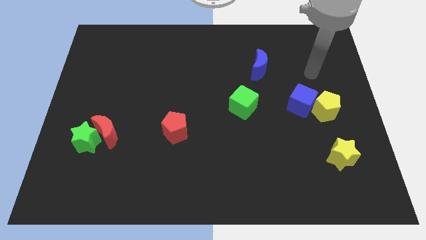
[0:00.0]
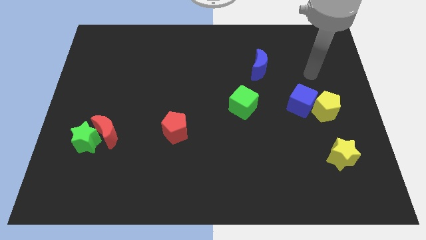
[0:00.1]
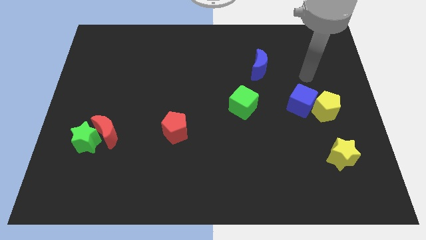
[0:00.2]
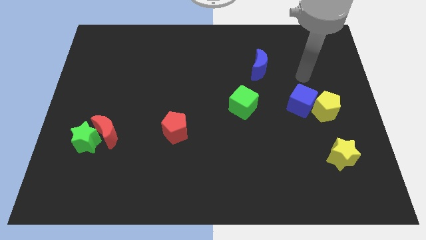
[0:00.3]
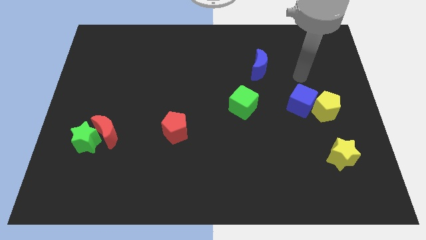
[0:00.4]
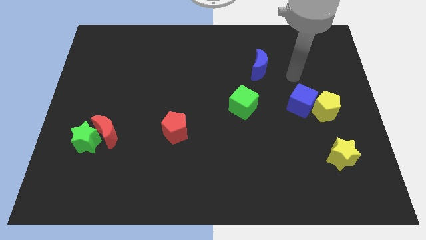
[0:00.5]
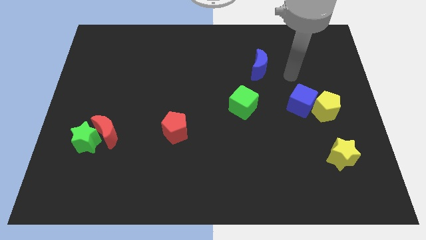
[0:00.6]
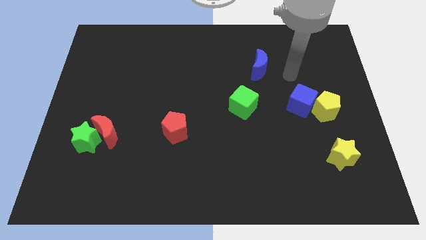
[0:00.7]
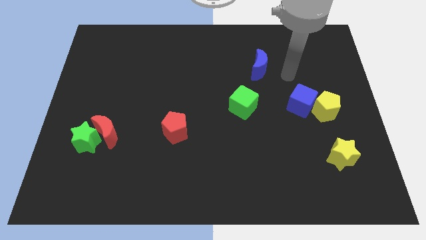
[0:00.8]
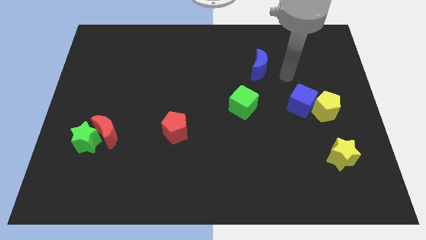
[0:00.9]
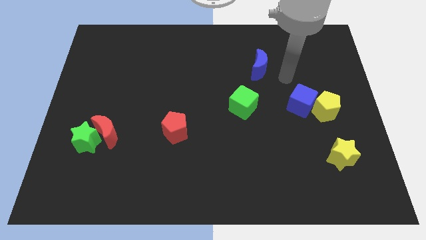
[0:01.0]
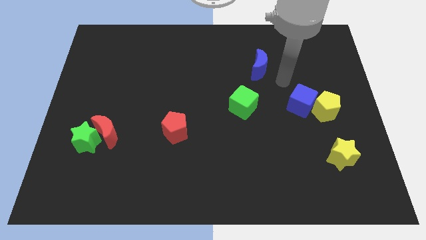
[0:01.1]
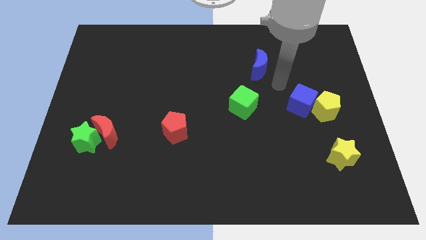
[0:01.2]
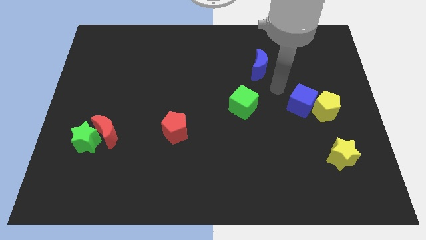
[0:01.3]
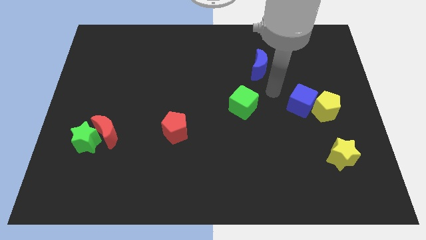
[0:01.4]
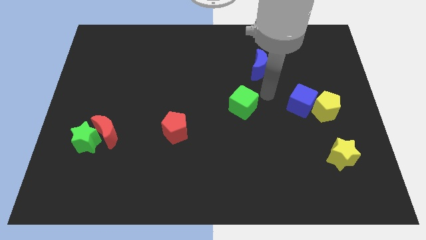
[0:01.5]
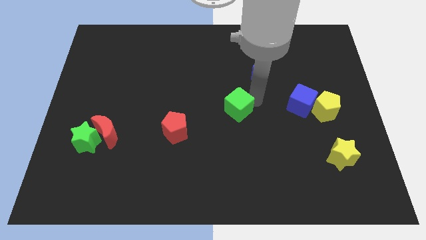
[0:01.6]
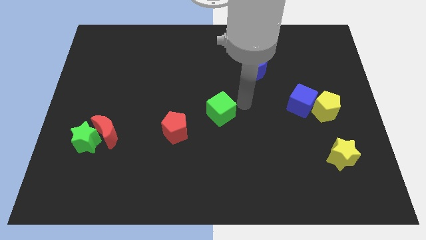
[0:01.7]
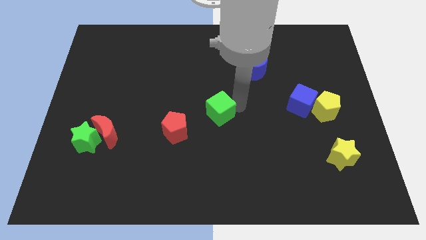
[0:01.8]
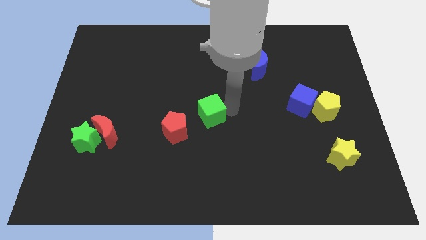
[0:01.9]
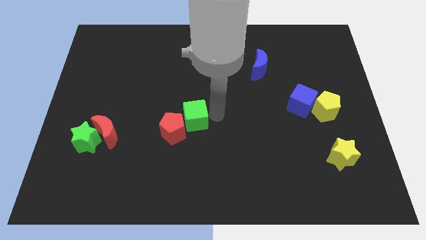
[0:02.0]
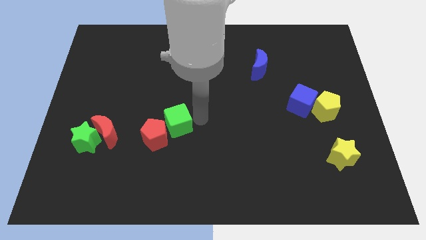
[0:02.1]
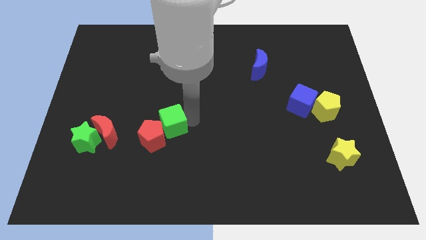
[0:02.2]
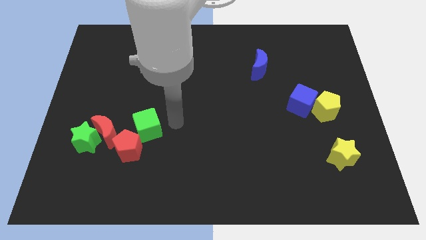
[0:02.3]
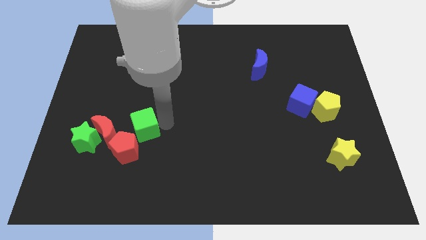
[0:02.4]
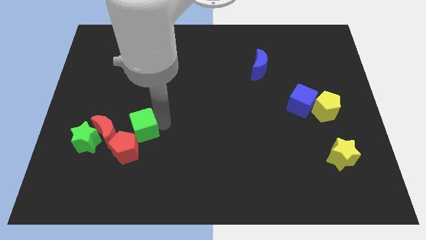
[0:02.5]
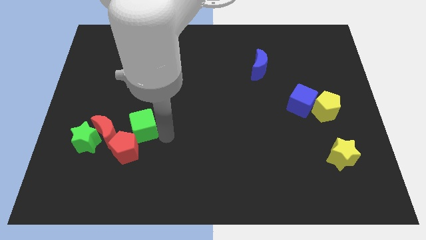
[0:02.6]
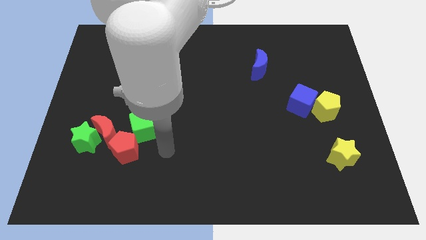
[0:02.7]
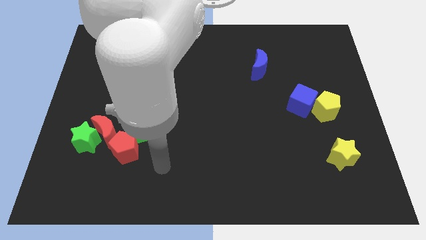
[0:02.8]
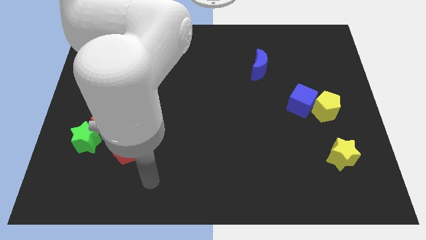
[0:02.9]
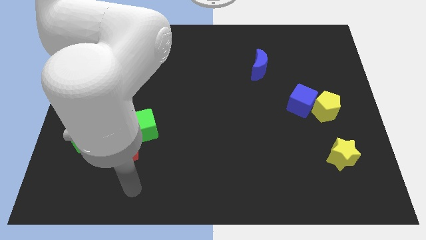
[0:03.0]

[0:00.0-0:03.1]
push the green cube along with the red pentagon to the right of the red crescent

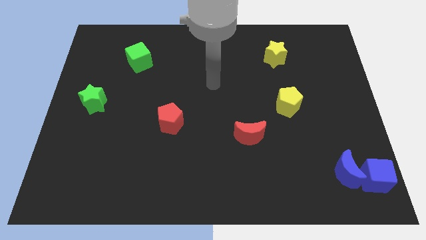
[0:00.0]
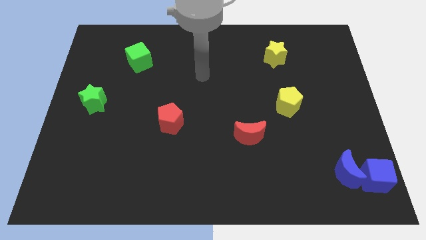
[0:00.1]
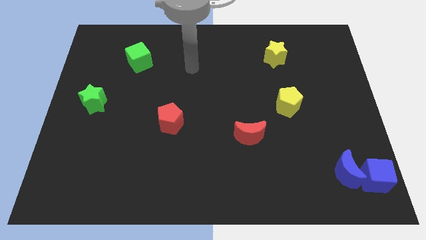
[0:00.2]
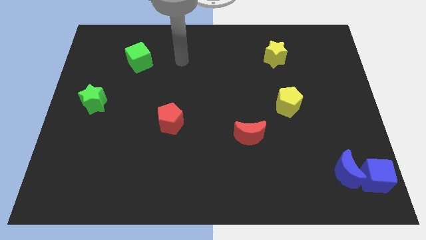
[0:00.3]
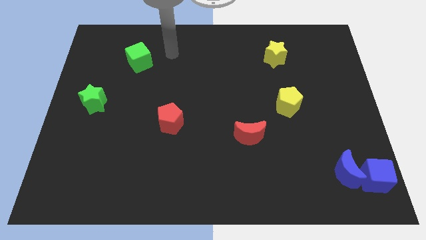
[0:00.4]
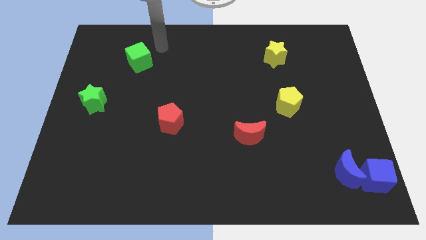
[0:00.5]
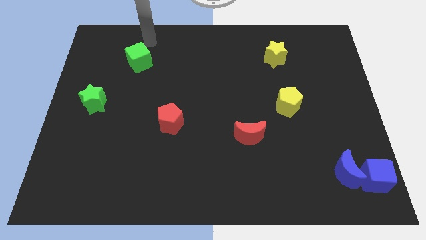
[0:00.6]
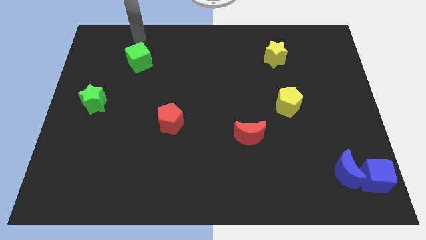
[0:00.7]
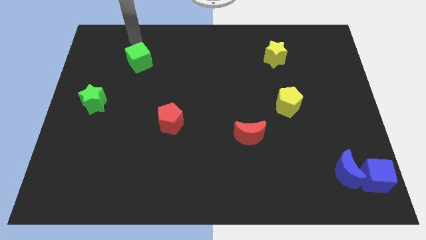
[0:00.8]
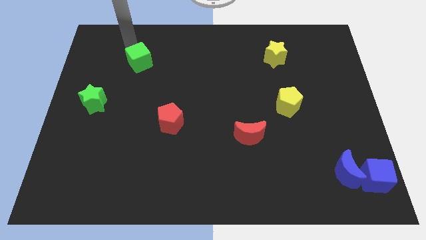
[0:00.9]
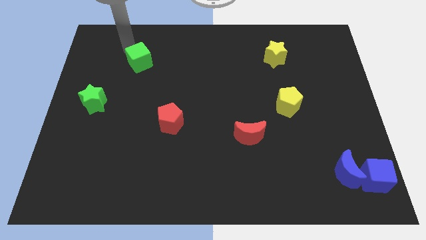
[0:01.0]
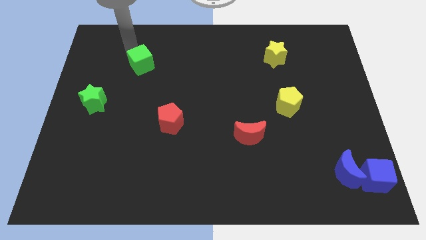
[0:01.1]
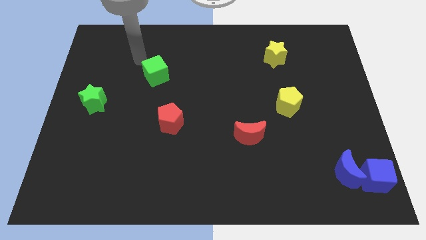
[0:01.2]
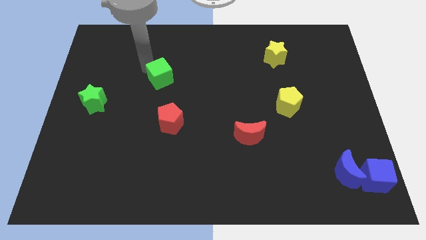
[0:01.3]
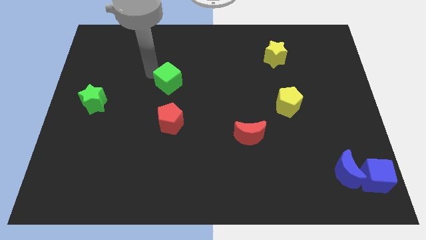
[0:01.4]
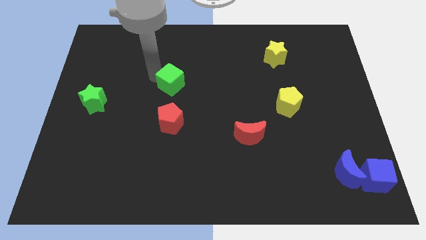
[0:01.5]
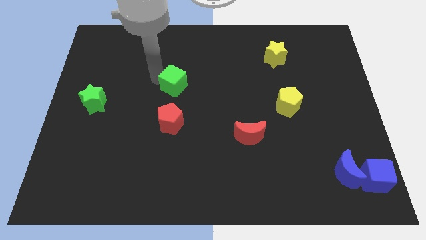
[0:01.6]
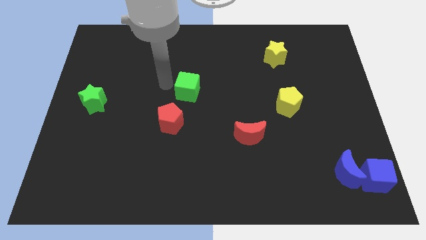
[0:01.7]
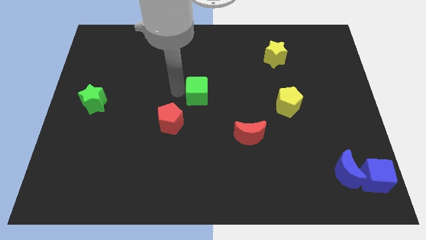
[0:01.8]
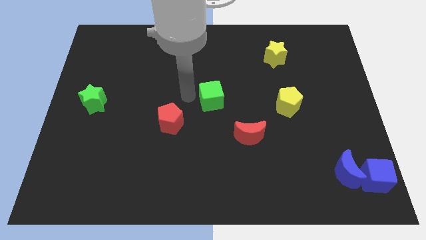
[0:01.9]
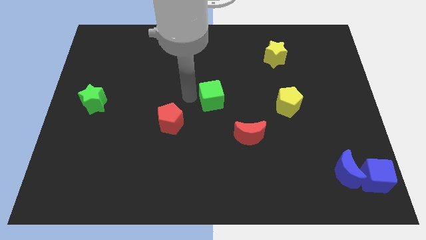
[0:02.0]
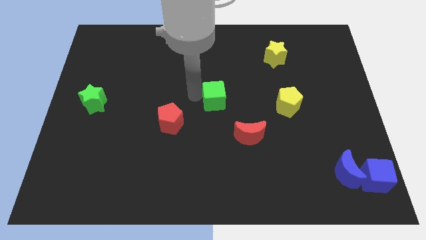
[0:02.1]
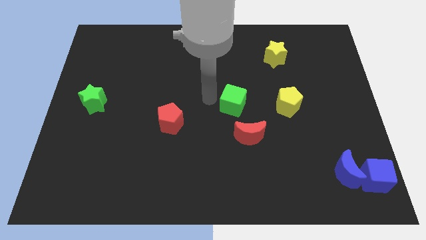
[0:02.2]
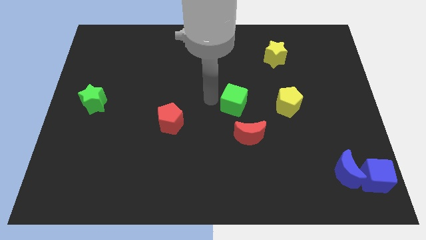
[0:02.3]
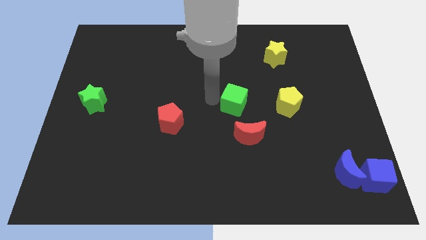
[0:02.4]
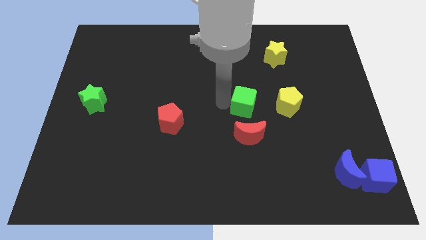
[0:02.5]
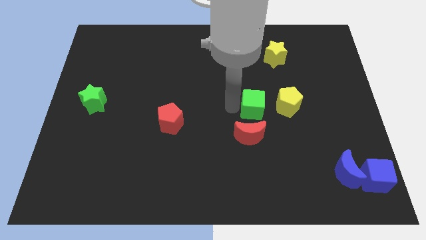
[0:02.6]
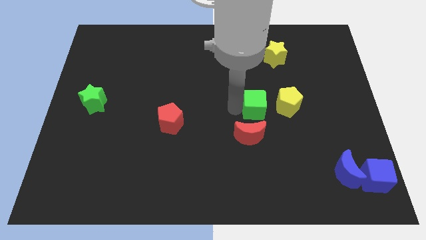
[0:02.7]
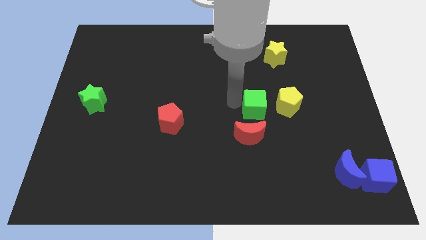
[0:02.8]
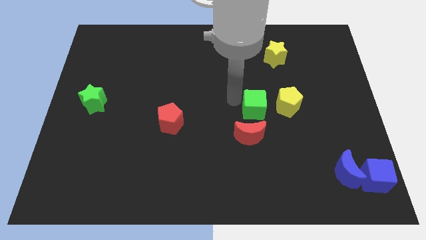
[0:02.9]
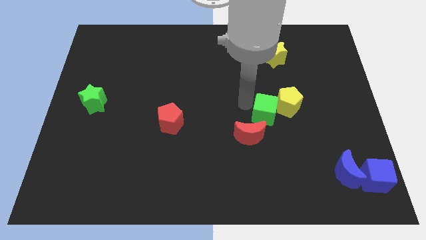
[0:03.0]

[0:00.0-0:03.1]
slide the green cube to the left of the yellow pentagon

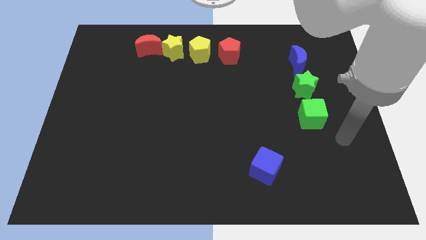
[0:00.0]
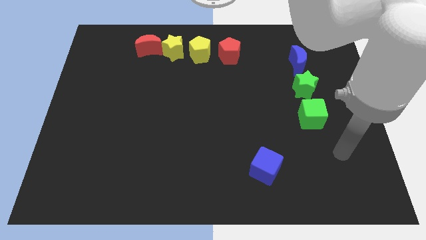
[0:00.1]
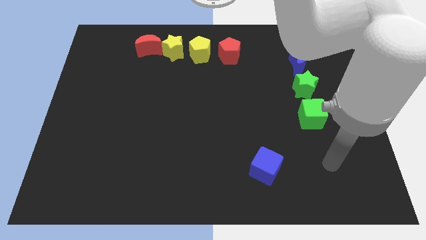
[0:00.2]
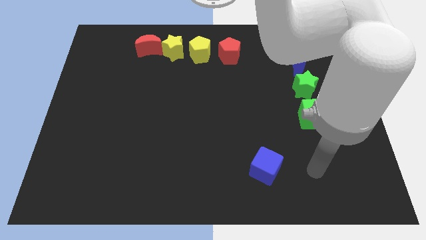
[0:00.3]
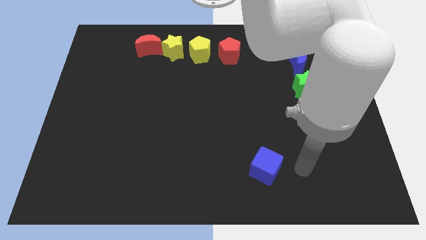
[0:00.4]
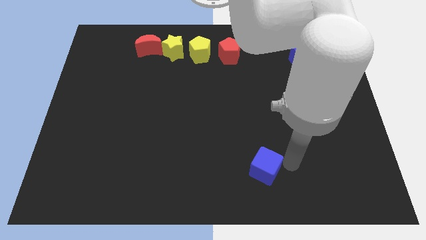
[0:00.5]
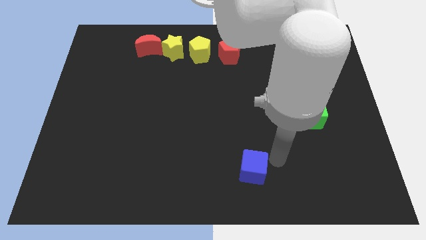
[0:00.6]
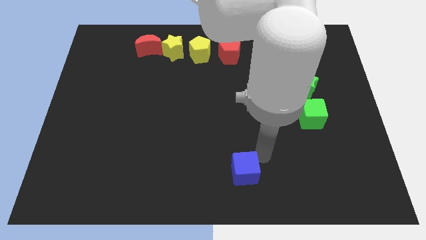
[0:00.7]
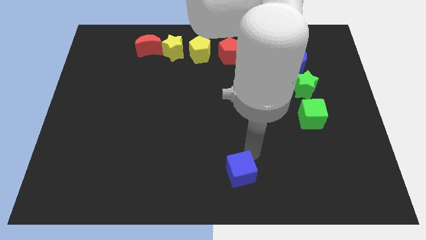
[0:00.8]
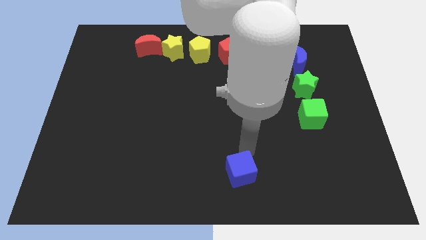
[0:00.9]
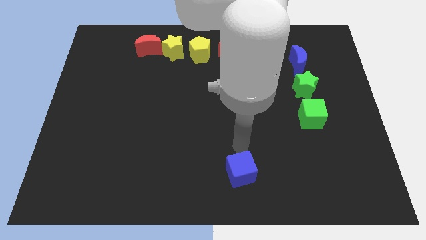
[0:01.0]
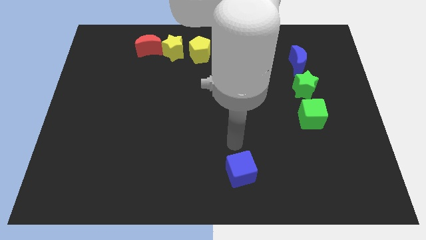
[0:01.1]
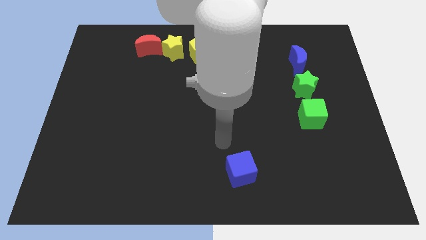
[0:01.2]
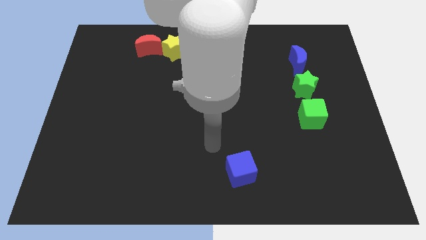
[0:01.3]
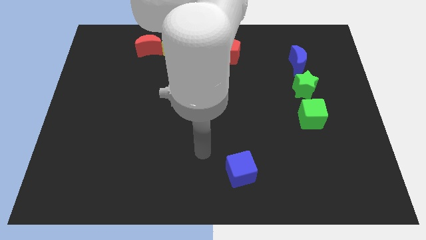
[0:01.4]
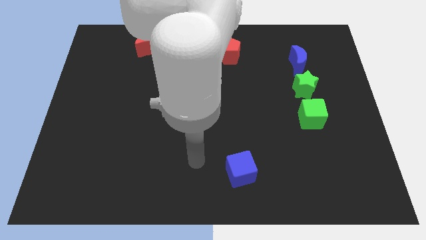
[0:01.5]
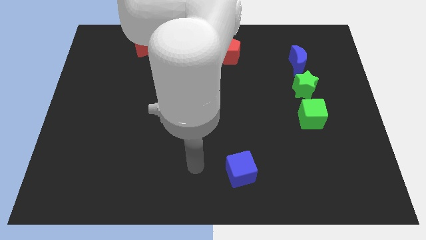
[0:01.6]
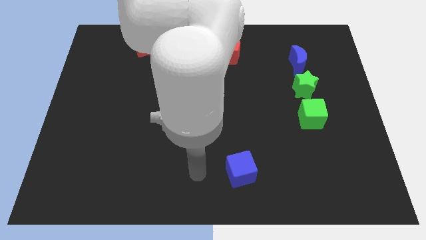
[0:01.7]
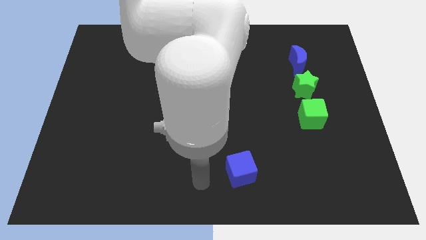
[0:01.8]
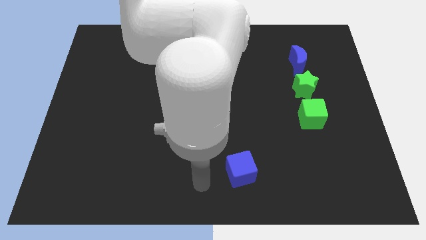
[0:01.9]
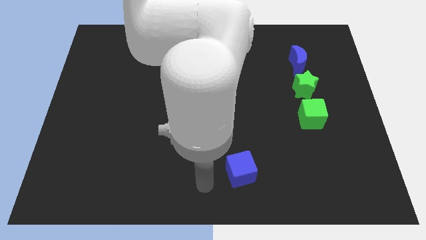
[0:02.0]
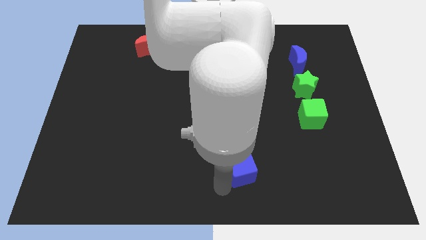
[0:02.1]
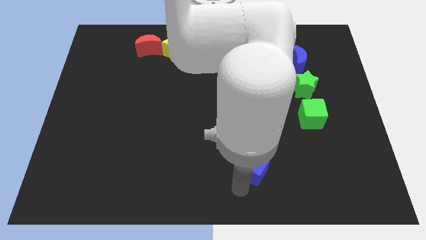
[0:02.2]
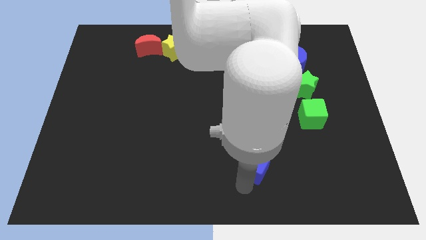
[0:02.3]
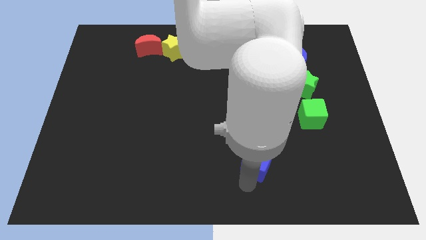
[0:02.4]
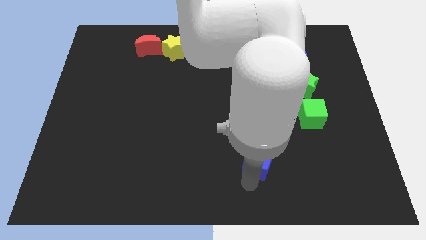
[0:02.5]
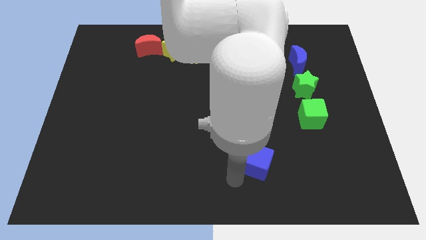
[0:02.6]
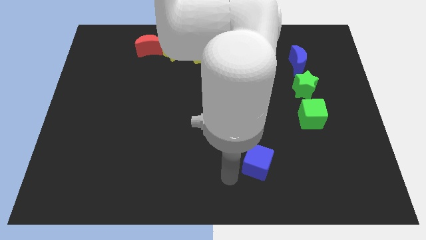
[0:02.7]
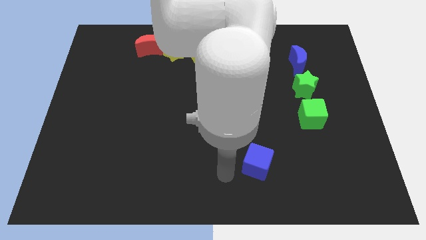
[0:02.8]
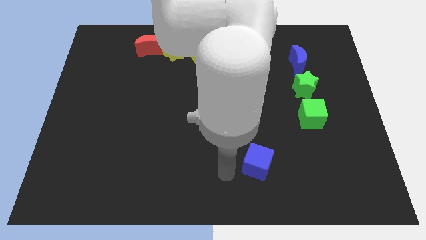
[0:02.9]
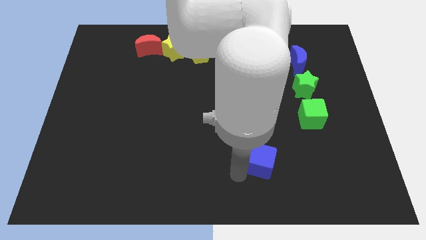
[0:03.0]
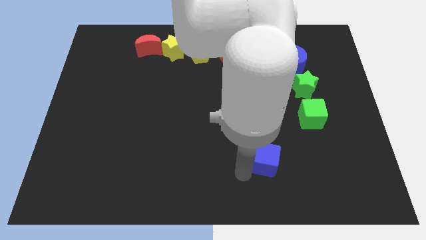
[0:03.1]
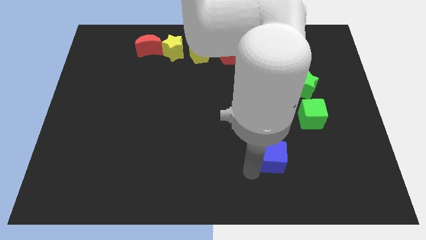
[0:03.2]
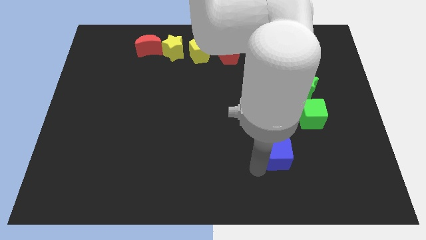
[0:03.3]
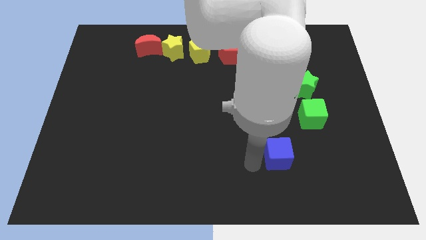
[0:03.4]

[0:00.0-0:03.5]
place the blue cube diagonally bottom right to the red pentagon
